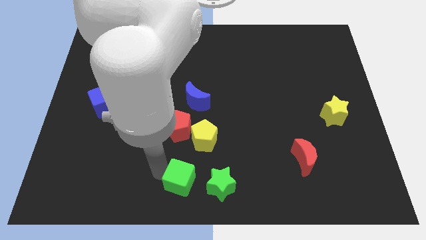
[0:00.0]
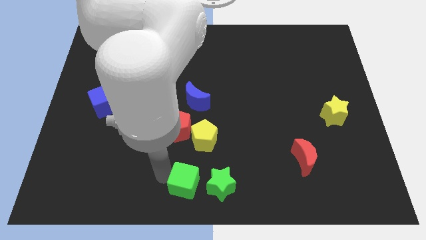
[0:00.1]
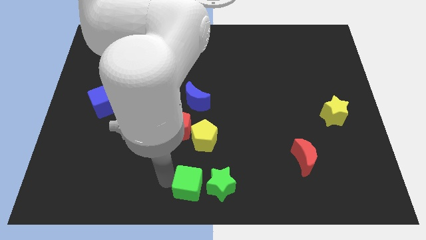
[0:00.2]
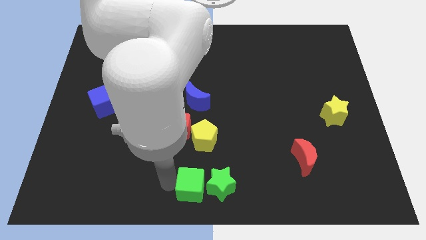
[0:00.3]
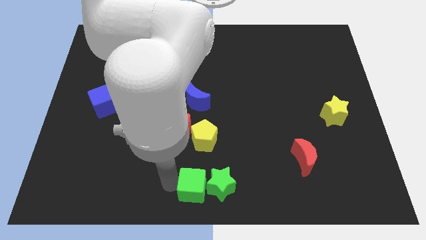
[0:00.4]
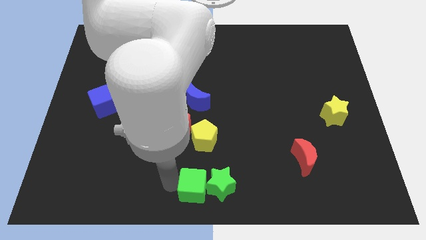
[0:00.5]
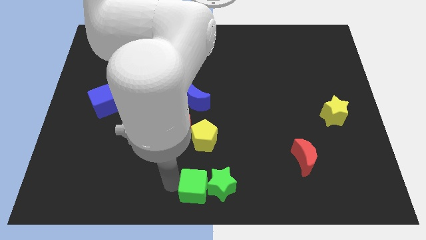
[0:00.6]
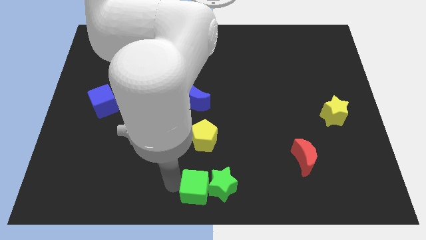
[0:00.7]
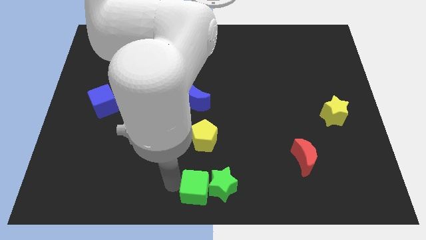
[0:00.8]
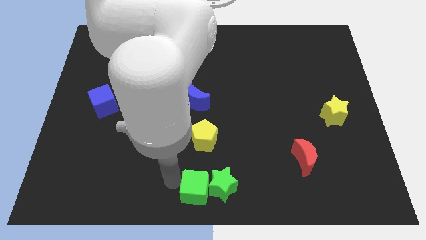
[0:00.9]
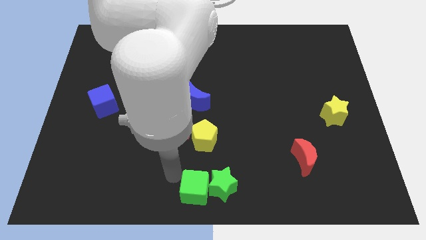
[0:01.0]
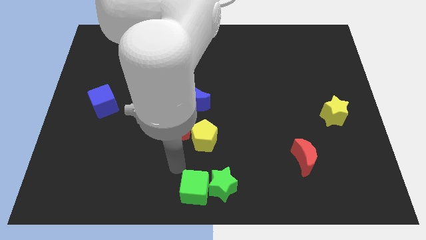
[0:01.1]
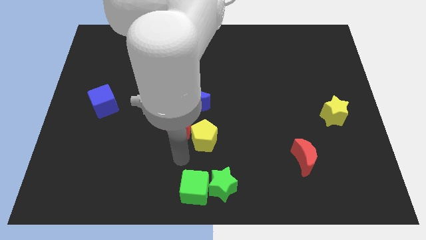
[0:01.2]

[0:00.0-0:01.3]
push the green cube into the green star

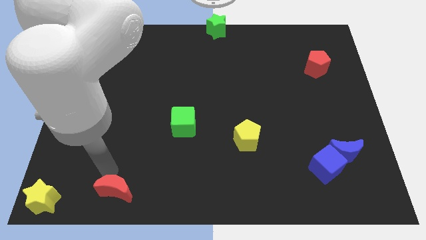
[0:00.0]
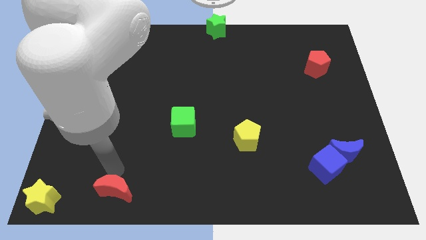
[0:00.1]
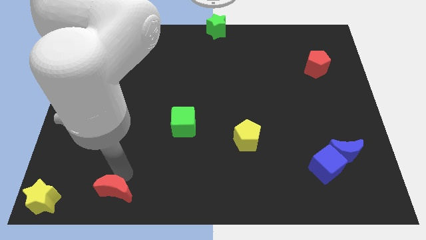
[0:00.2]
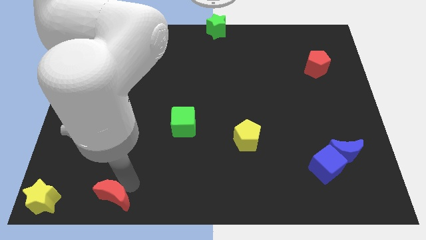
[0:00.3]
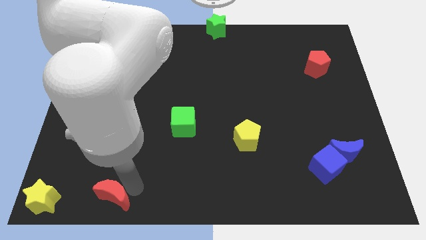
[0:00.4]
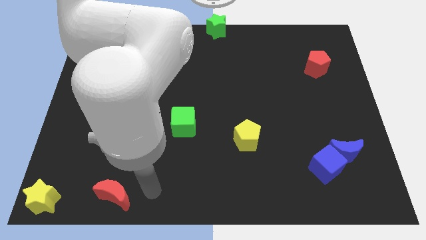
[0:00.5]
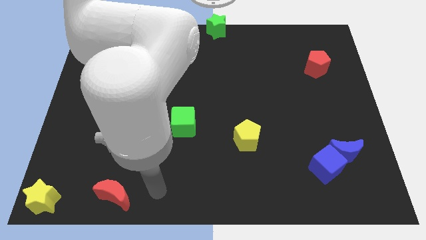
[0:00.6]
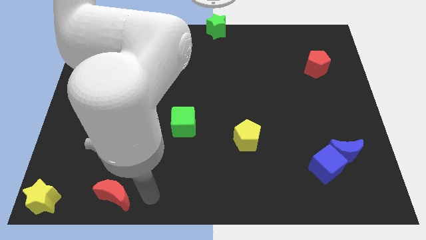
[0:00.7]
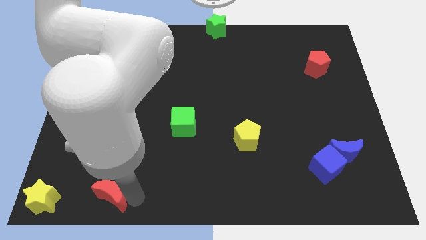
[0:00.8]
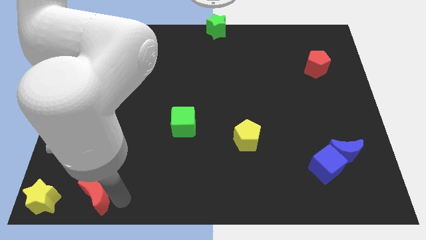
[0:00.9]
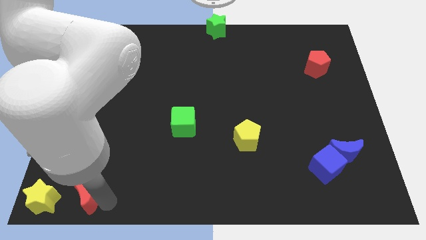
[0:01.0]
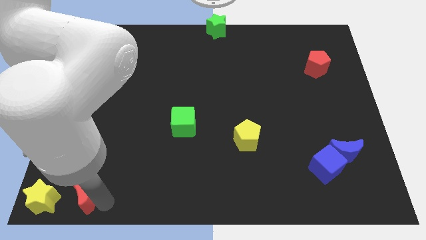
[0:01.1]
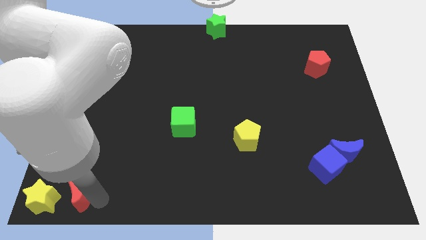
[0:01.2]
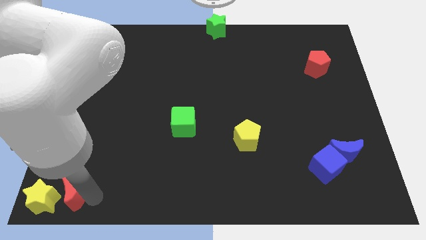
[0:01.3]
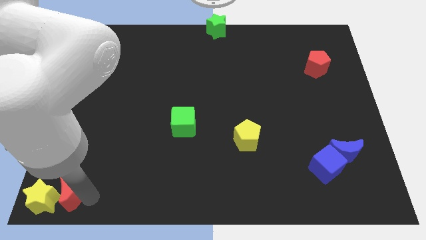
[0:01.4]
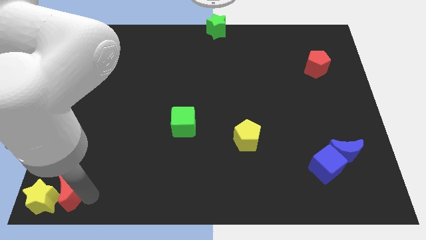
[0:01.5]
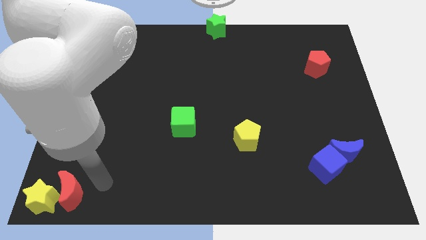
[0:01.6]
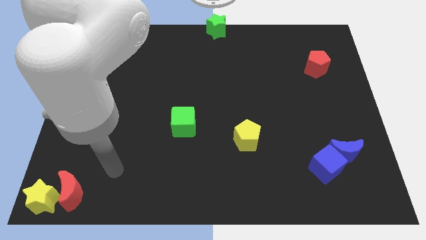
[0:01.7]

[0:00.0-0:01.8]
move the red crescent close to the yellow star

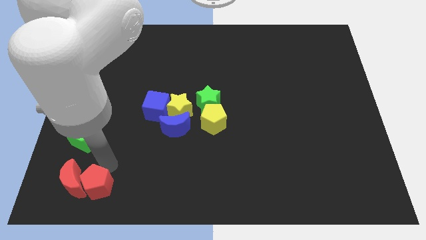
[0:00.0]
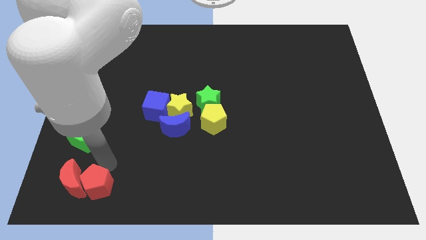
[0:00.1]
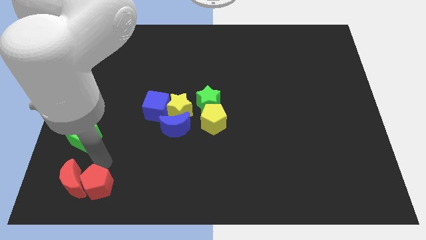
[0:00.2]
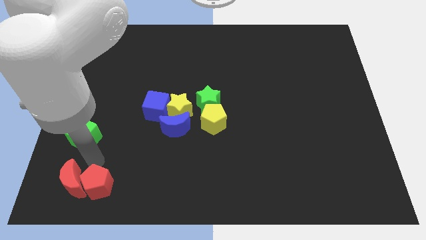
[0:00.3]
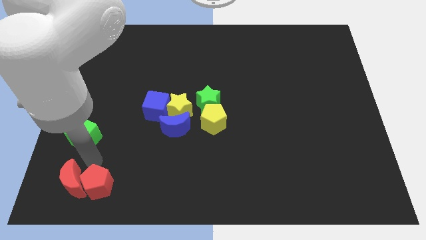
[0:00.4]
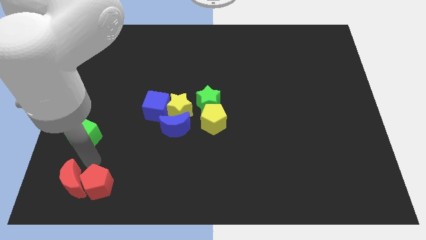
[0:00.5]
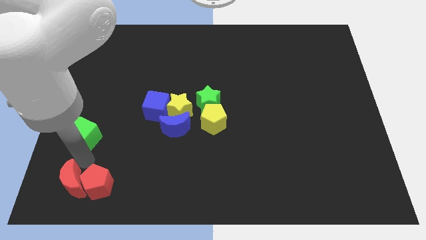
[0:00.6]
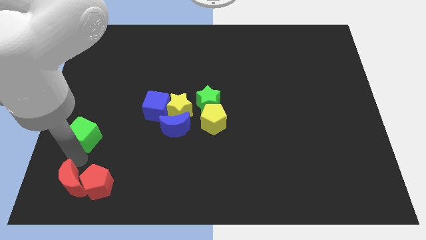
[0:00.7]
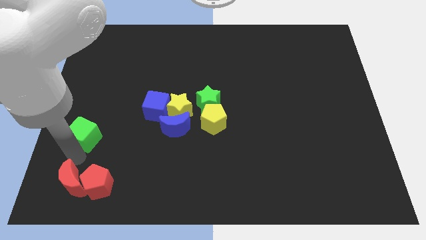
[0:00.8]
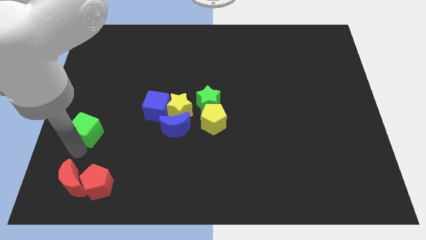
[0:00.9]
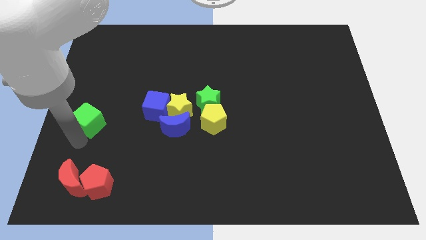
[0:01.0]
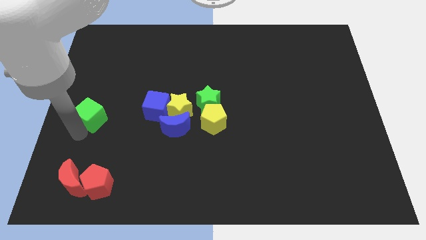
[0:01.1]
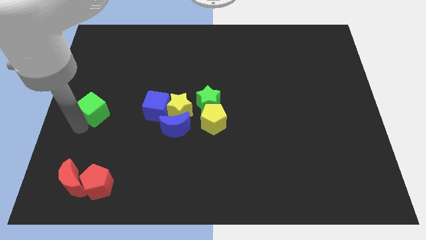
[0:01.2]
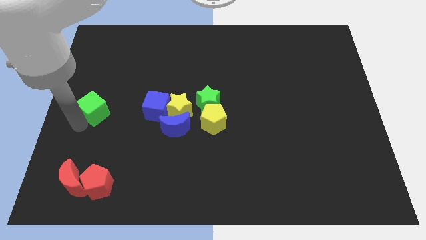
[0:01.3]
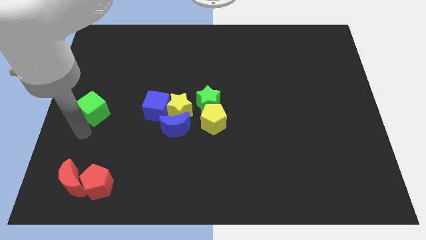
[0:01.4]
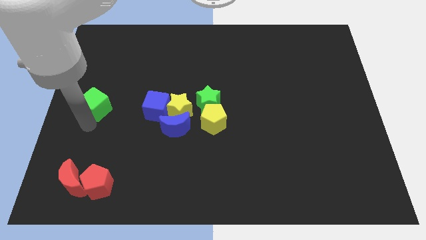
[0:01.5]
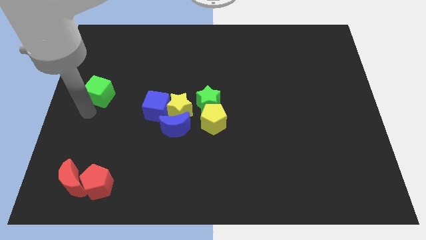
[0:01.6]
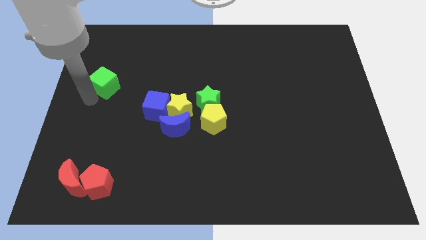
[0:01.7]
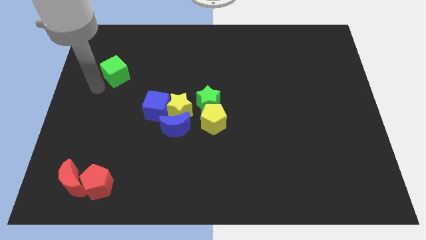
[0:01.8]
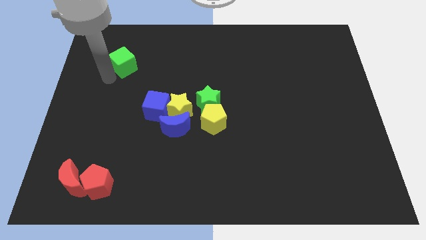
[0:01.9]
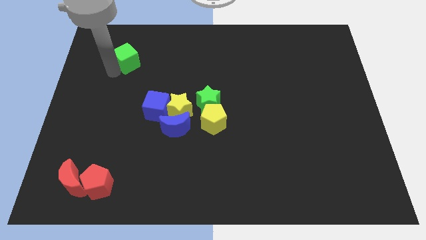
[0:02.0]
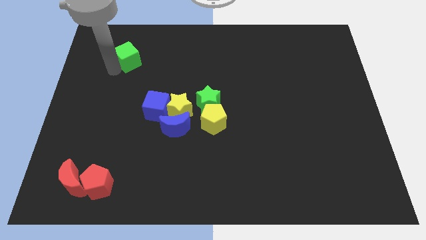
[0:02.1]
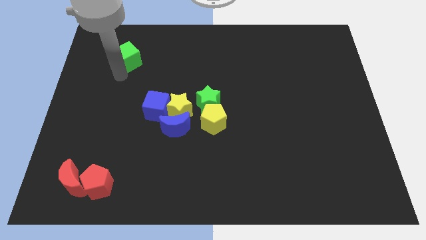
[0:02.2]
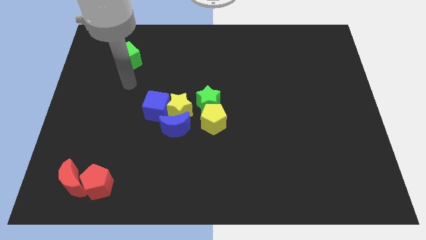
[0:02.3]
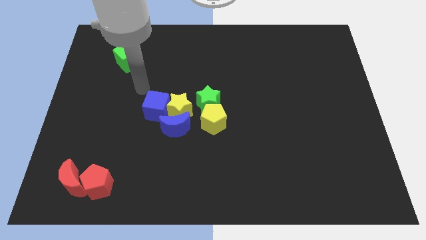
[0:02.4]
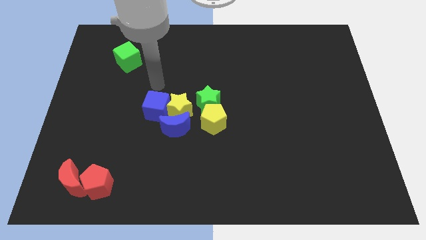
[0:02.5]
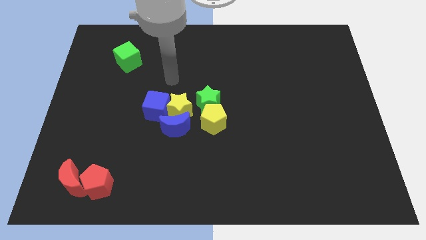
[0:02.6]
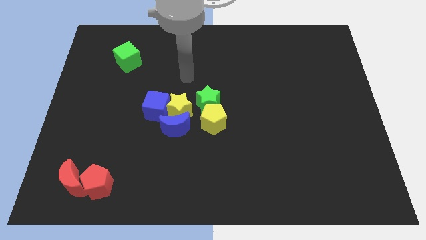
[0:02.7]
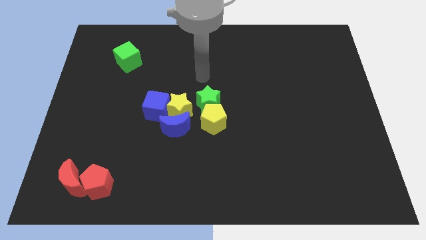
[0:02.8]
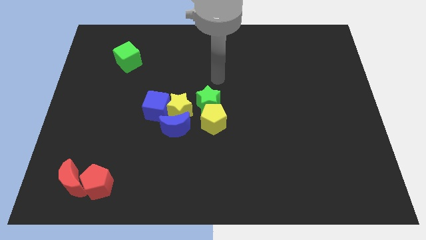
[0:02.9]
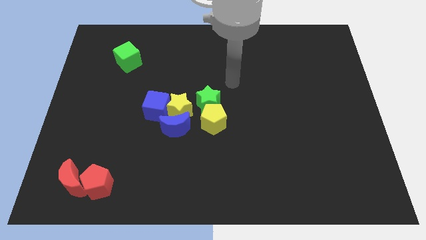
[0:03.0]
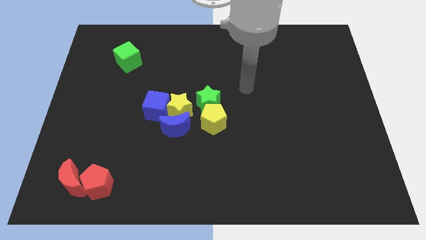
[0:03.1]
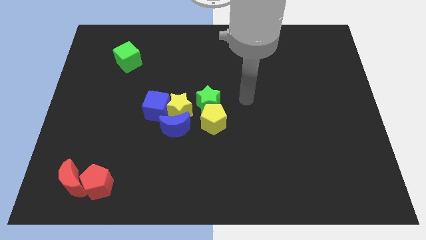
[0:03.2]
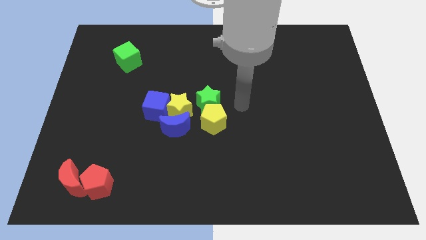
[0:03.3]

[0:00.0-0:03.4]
move green cube diagonally top left of the blue cube

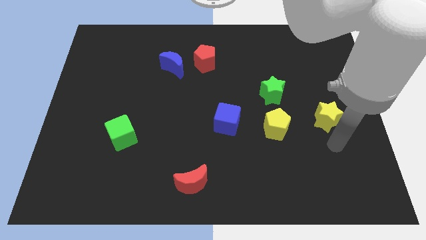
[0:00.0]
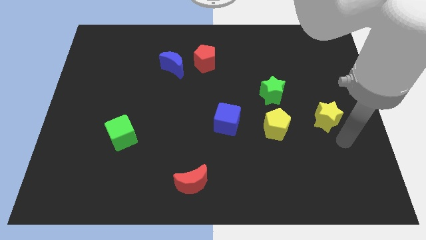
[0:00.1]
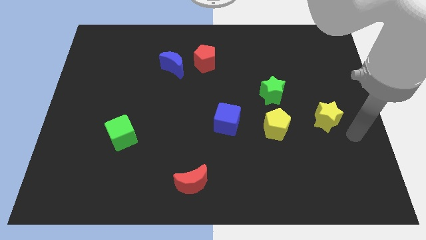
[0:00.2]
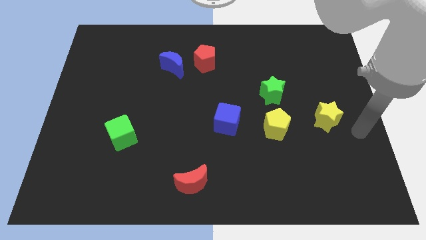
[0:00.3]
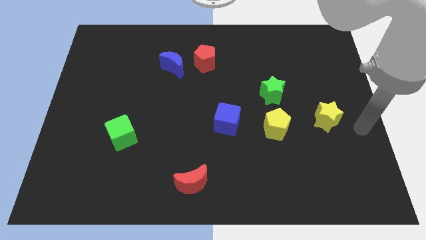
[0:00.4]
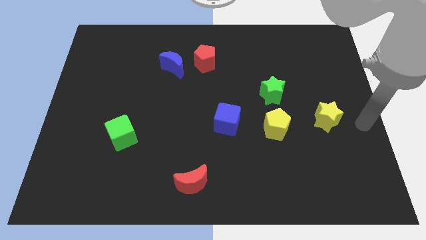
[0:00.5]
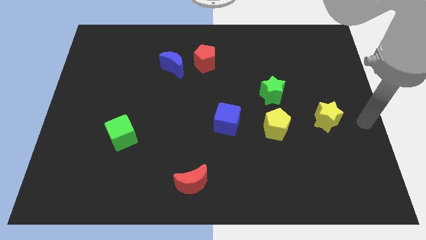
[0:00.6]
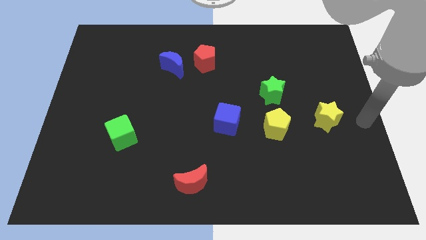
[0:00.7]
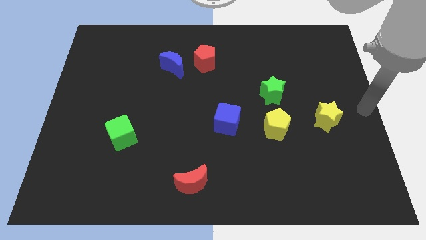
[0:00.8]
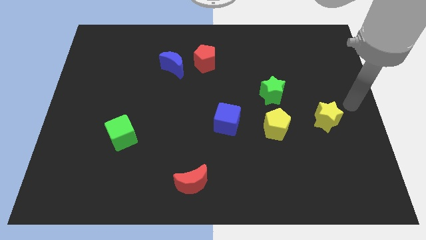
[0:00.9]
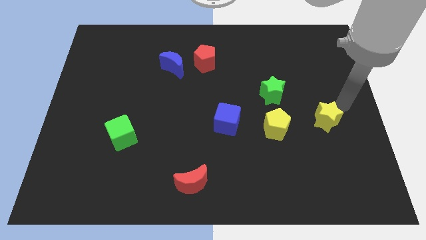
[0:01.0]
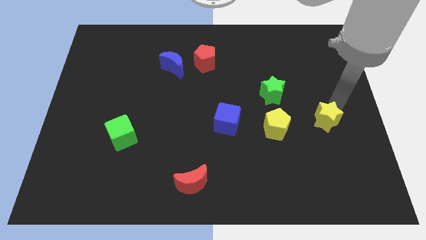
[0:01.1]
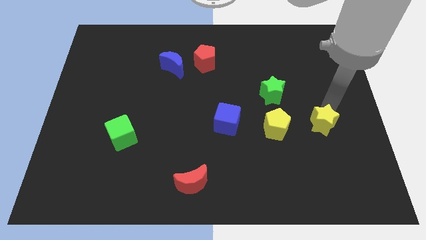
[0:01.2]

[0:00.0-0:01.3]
point your arm at the top right side of yellow star

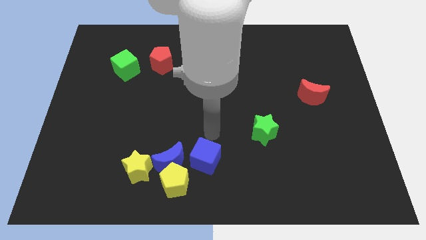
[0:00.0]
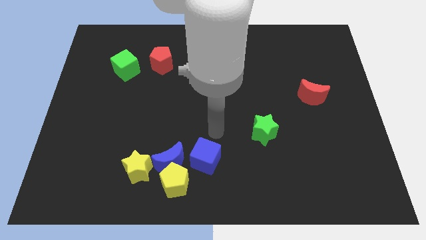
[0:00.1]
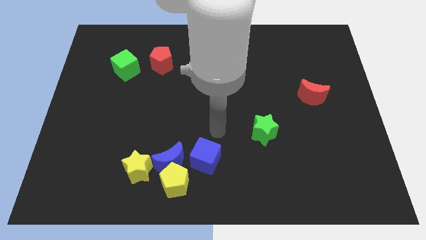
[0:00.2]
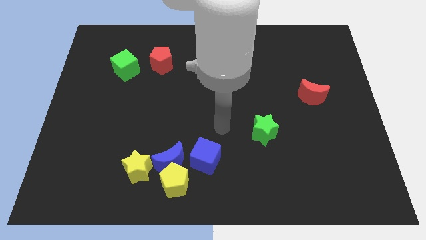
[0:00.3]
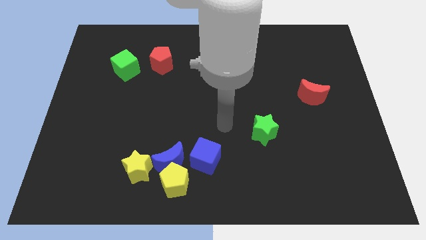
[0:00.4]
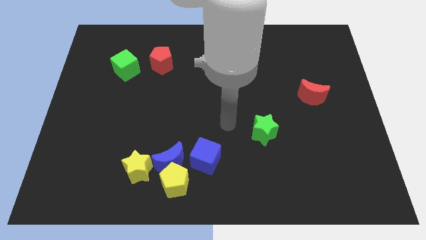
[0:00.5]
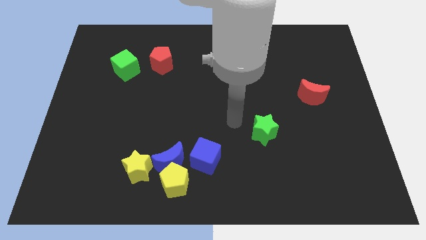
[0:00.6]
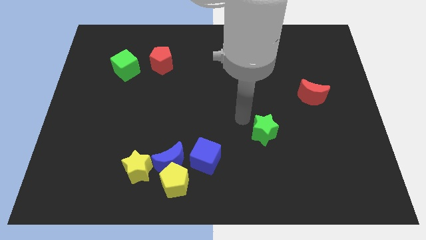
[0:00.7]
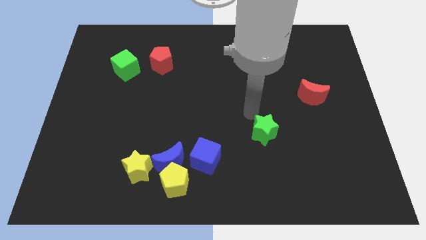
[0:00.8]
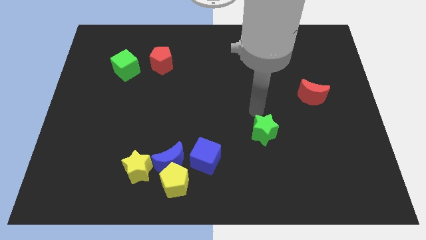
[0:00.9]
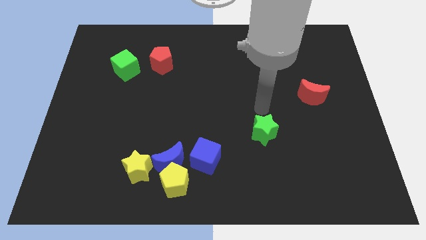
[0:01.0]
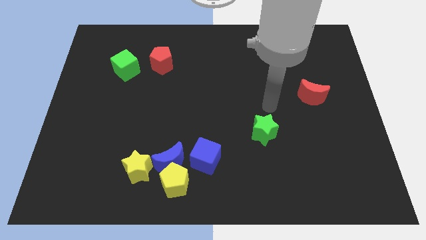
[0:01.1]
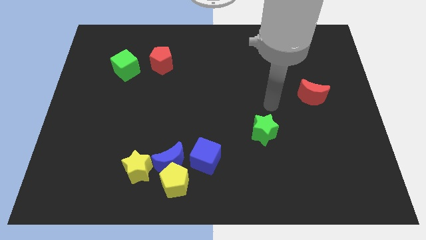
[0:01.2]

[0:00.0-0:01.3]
point your arm at the top of the green star
